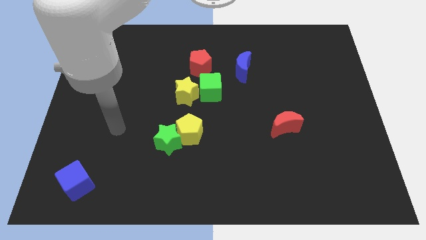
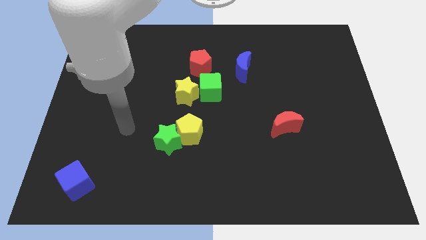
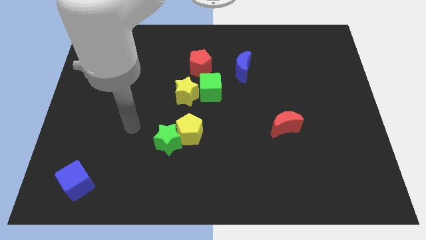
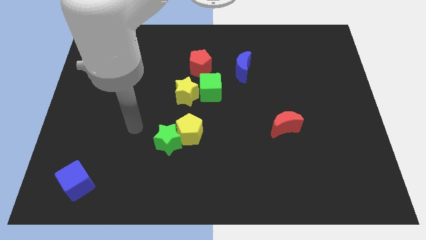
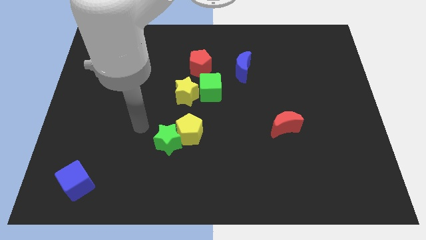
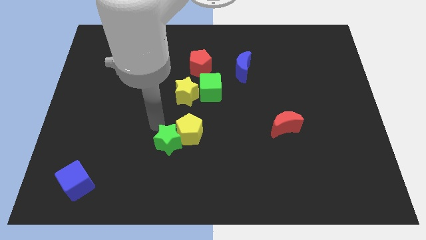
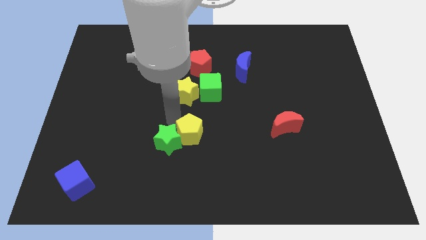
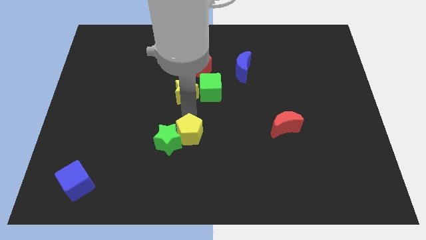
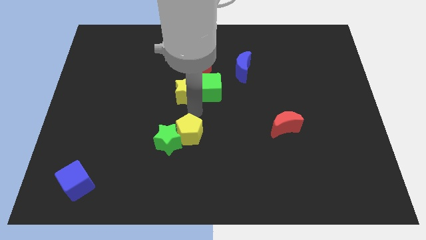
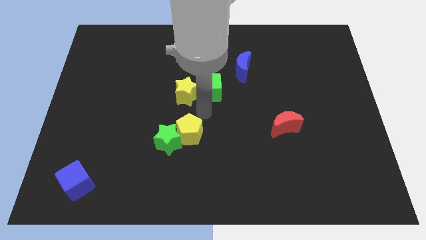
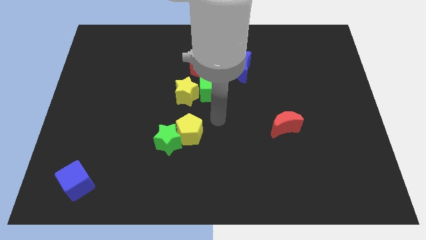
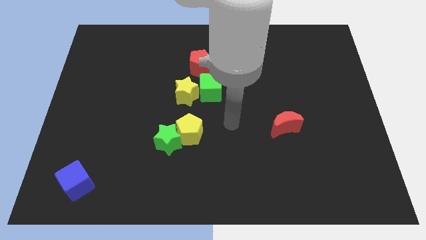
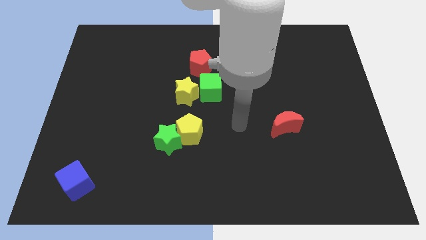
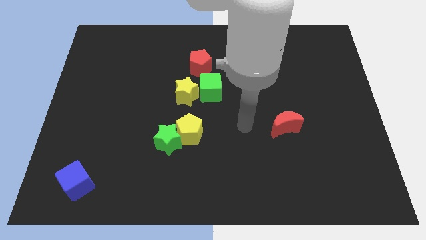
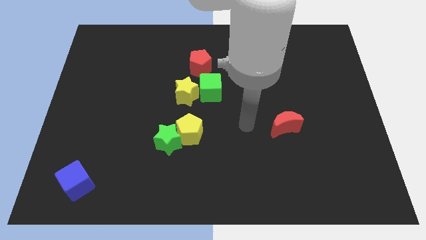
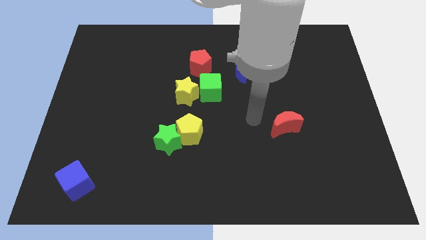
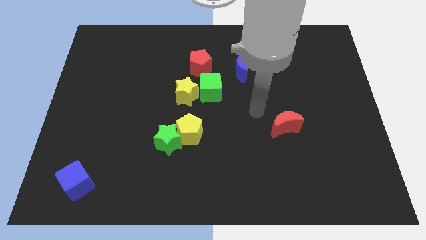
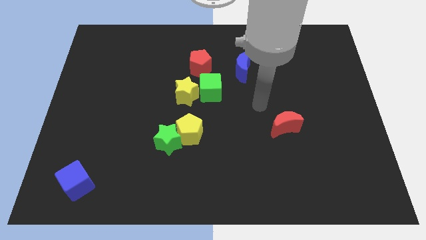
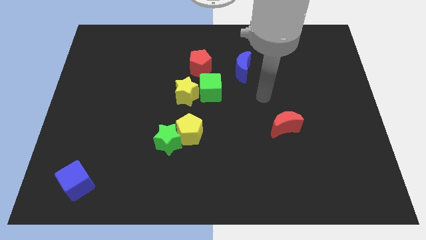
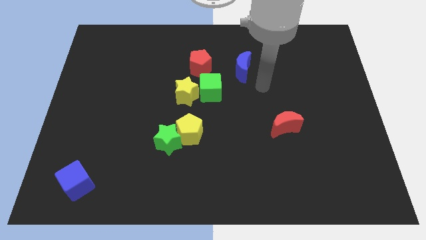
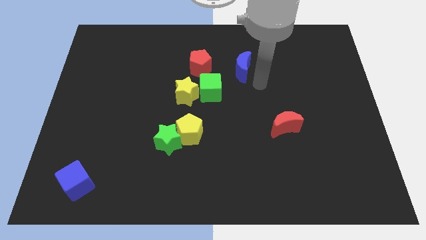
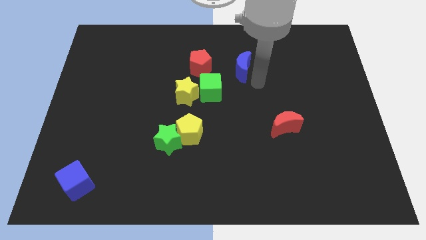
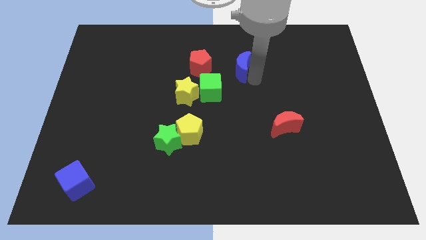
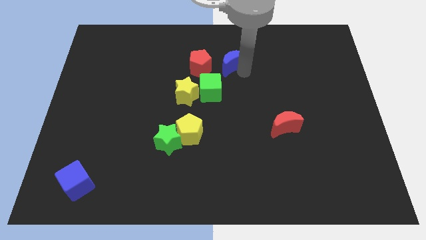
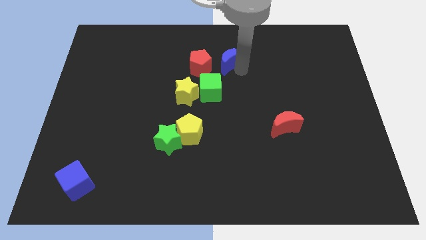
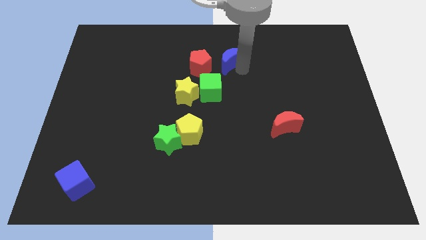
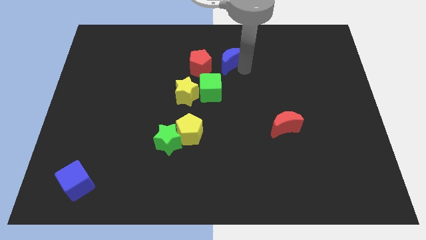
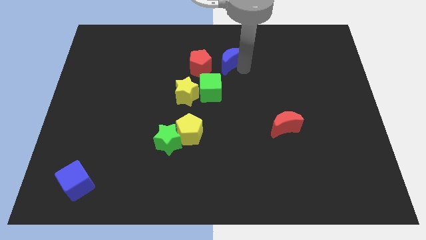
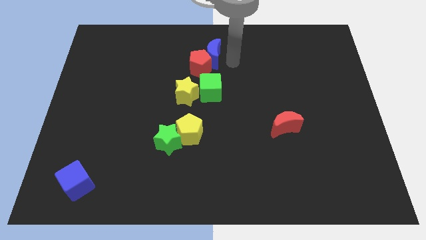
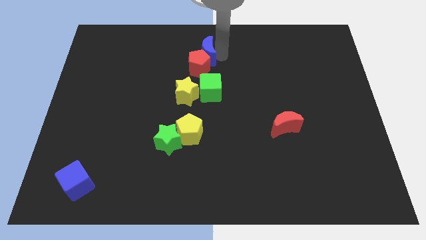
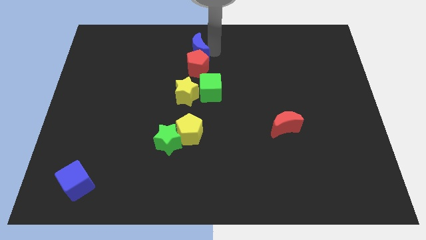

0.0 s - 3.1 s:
push the blue crescent to the top of the red pentagon

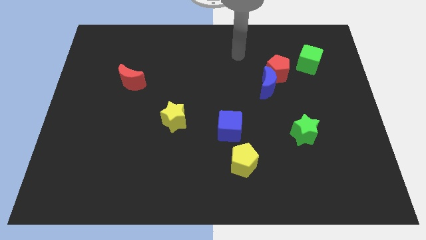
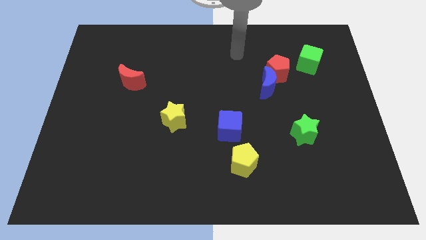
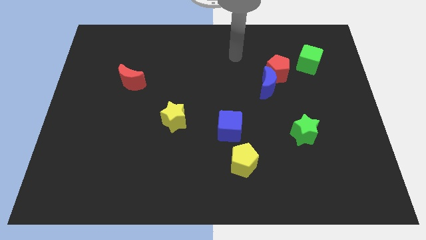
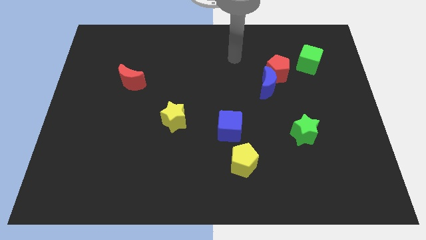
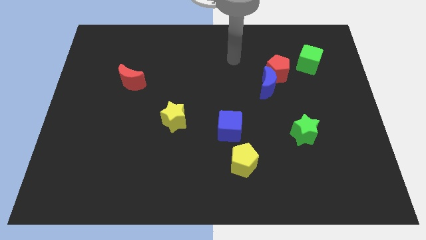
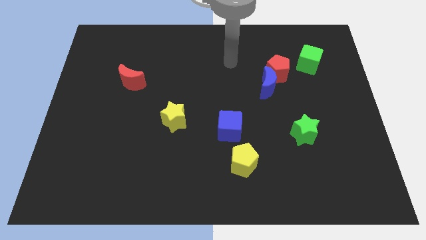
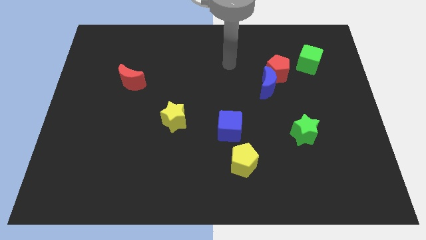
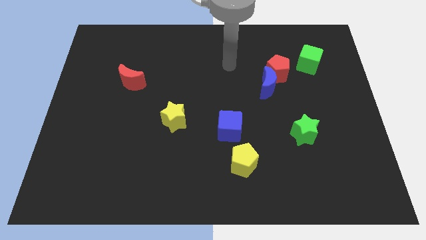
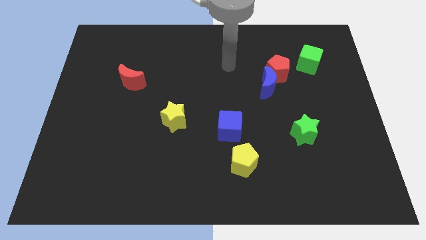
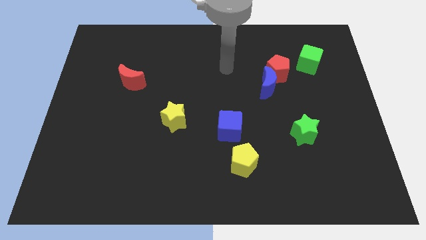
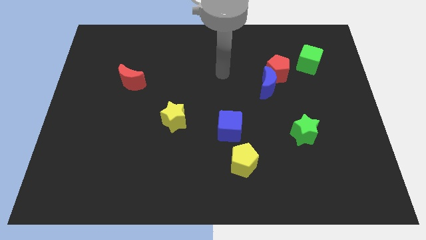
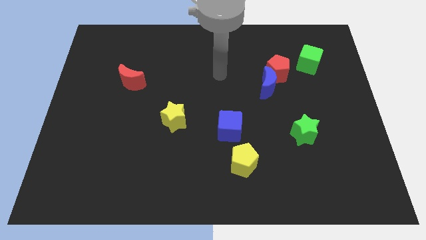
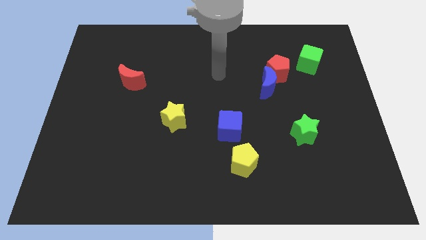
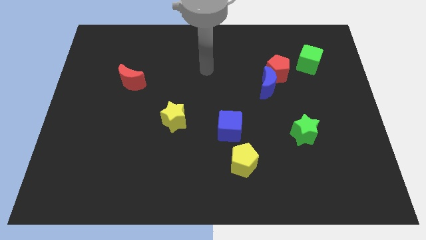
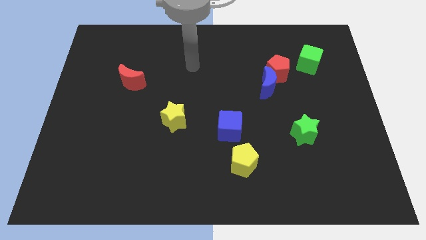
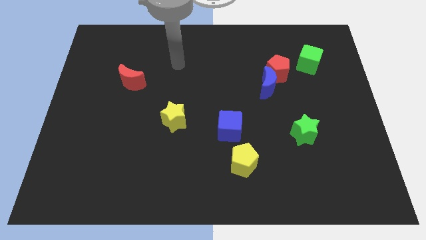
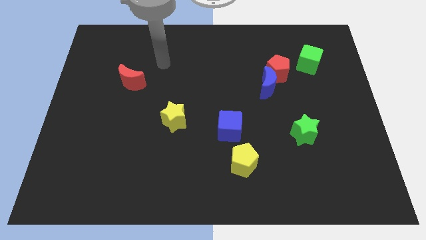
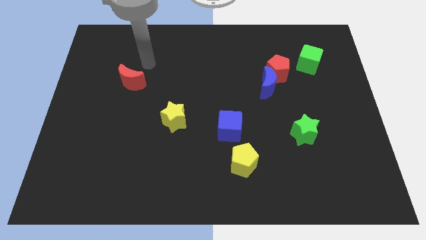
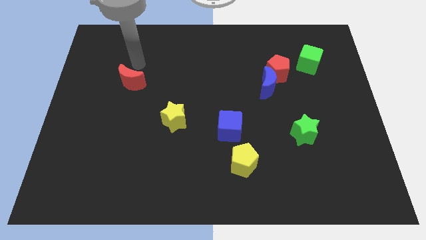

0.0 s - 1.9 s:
point your hand above the red moon

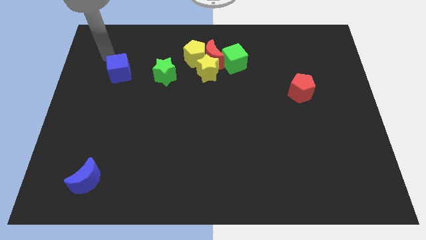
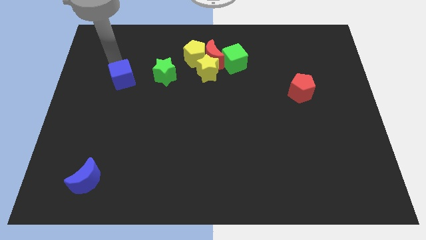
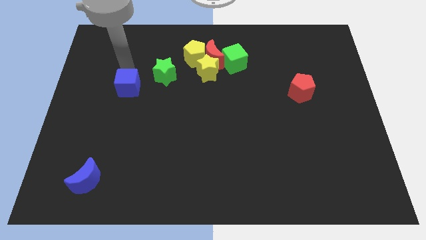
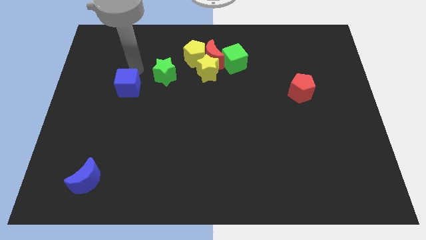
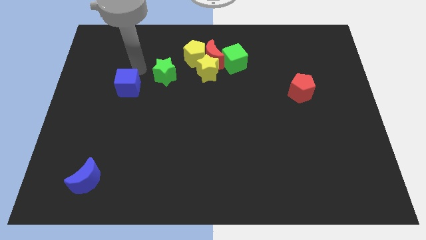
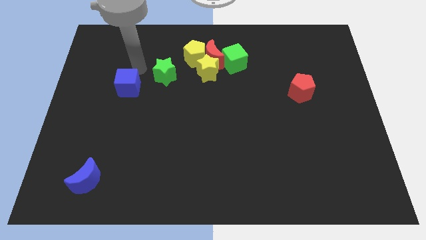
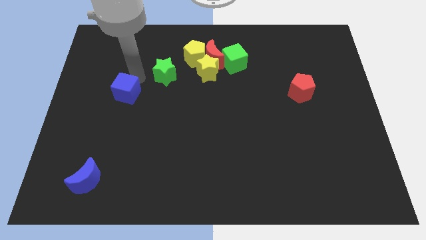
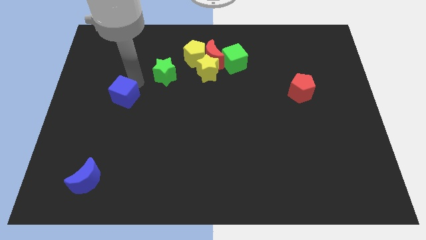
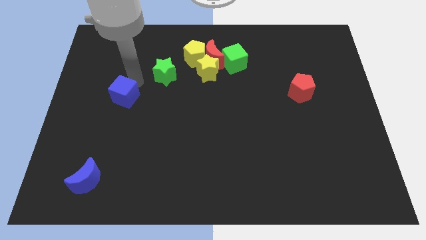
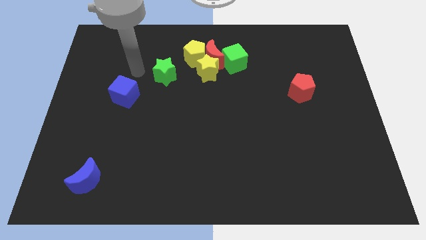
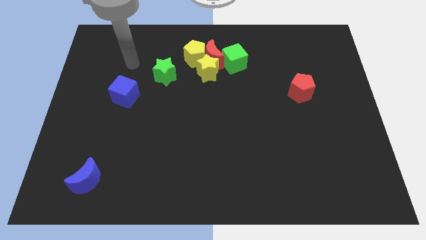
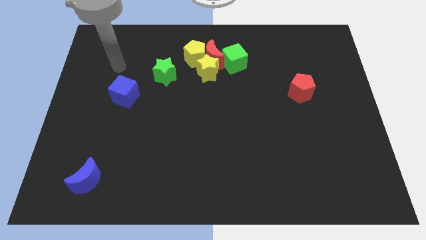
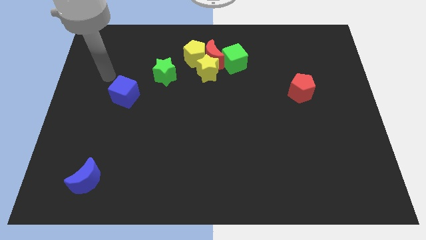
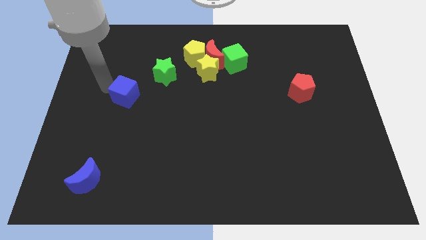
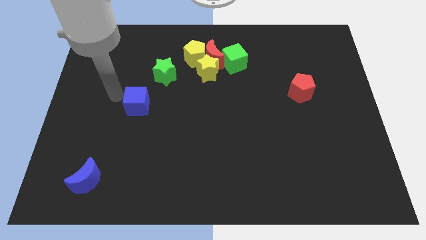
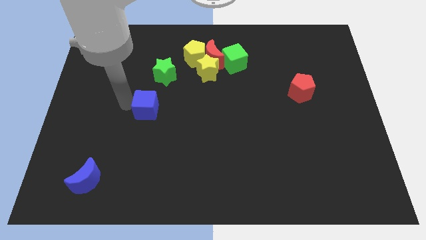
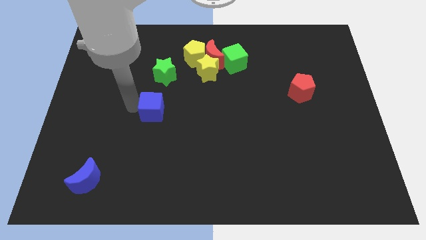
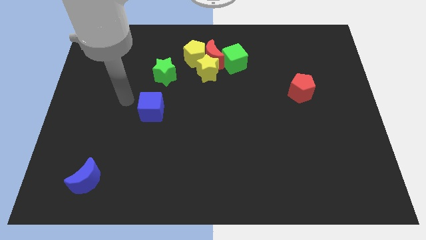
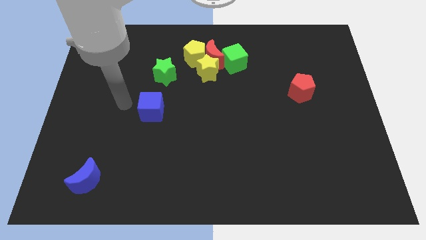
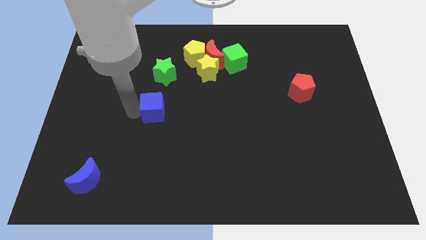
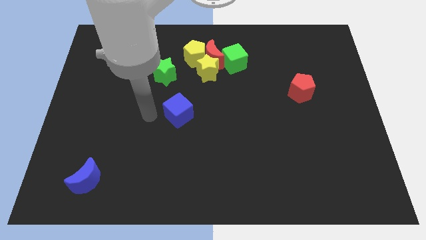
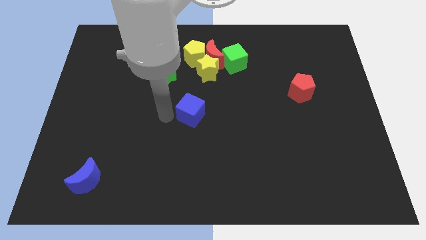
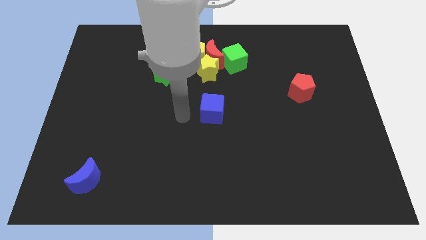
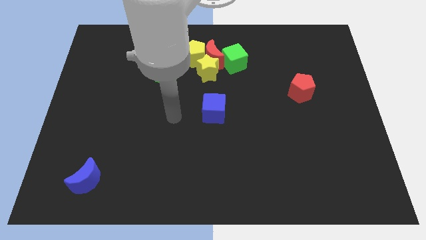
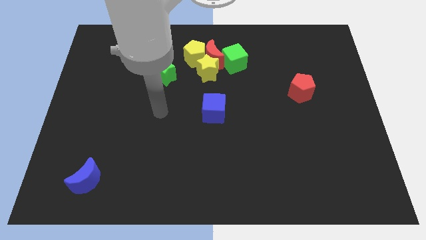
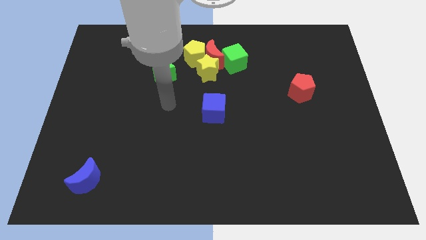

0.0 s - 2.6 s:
move the blue cube to the bottom of the yellow star

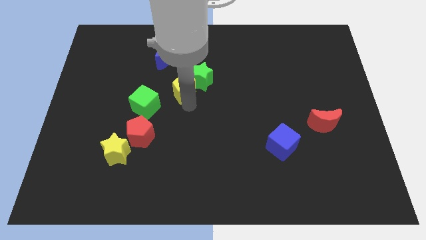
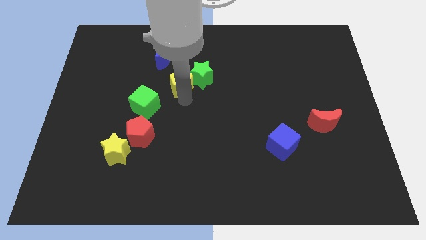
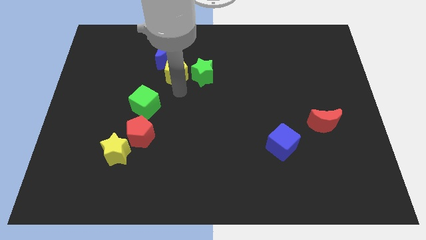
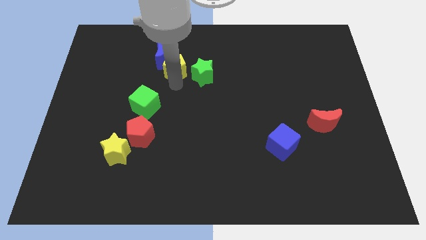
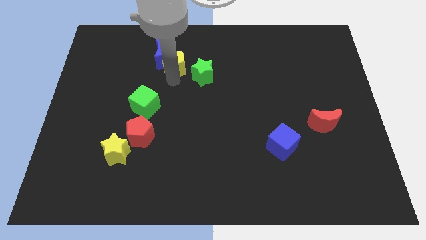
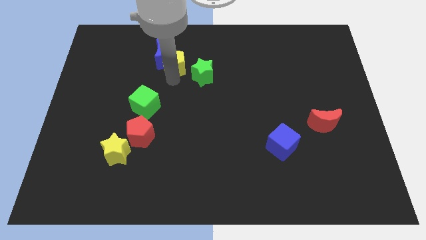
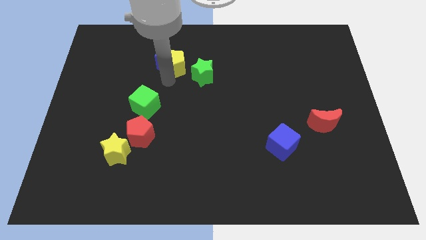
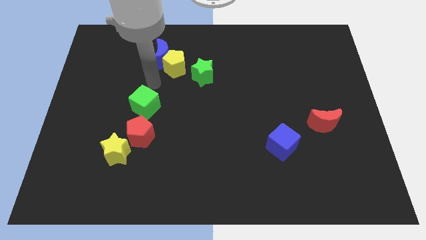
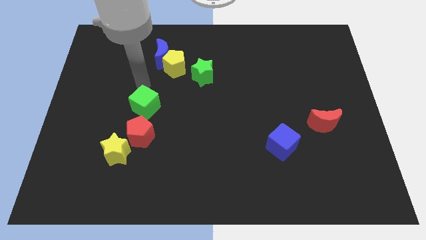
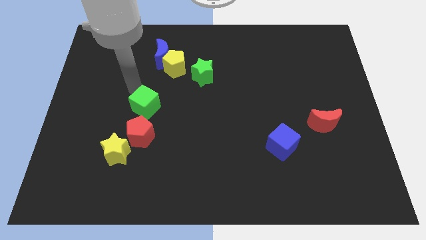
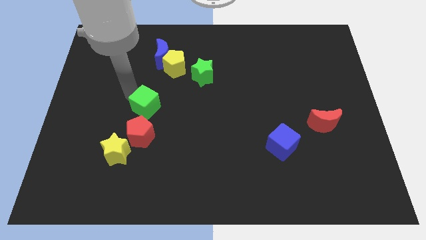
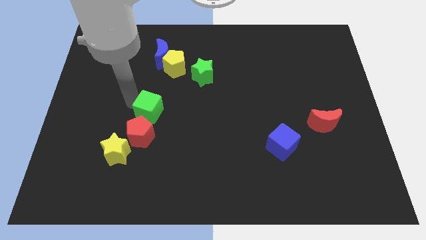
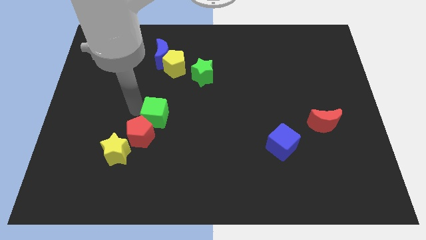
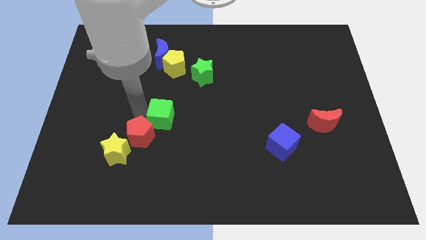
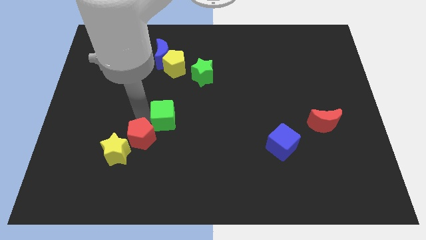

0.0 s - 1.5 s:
slightly tap the green block towards its right
